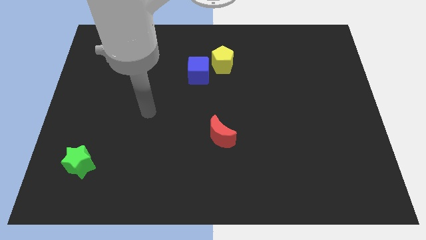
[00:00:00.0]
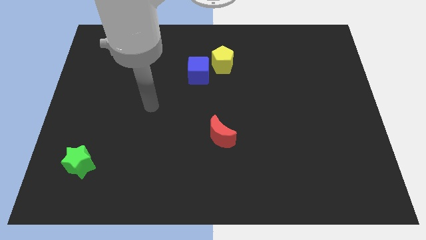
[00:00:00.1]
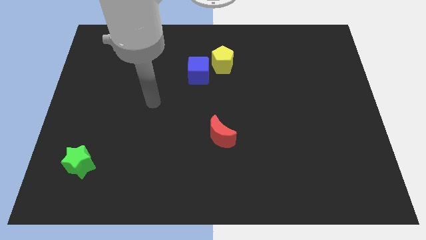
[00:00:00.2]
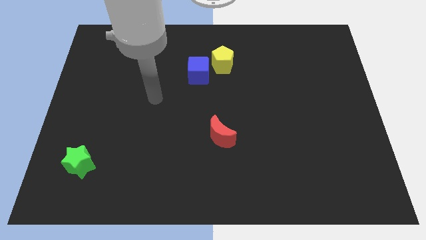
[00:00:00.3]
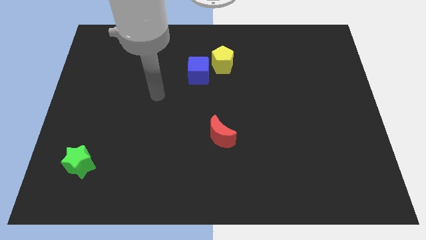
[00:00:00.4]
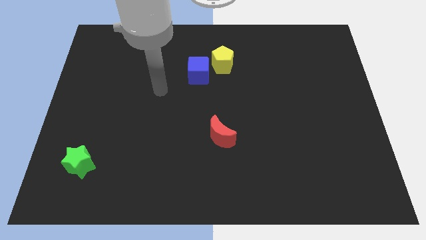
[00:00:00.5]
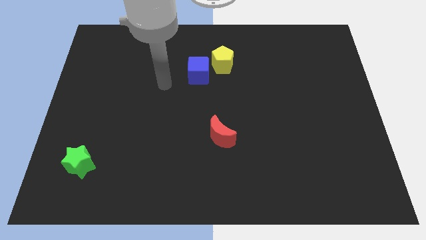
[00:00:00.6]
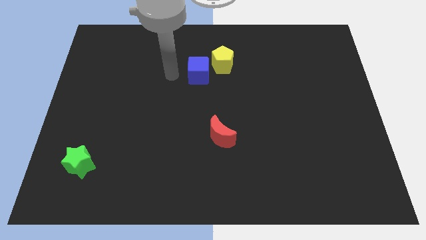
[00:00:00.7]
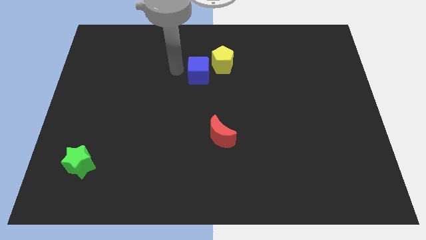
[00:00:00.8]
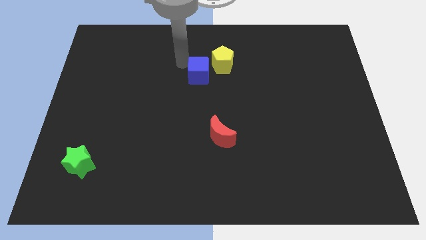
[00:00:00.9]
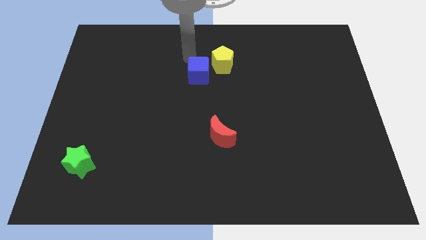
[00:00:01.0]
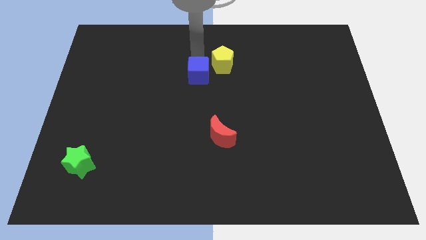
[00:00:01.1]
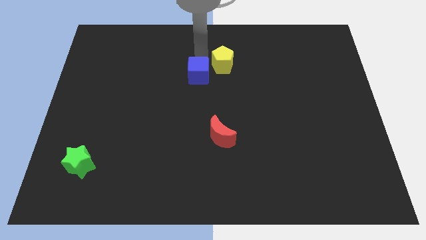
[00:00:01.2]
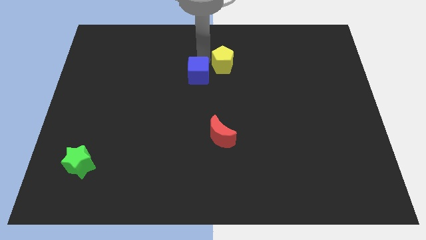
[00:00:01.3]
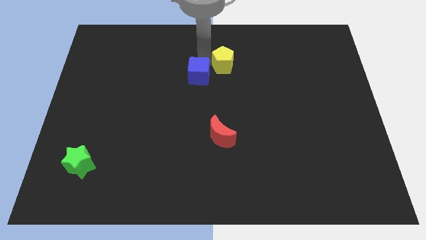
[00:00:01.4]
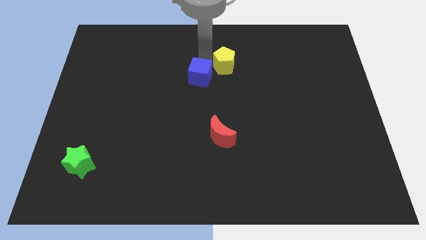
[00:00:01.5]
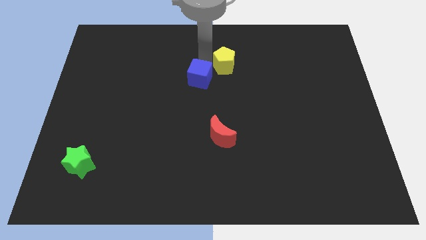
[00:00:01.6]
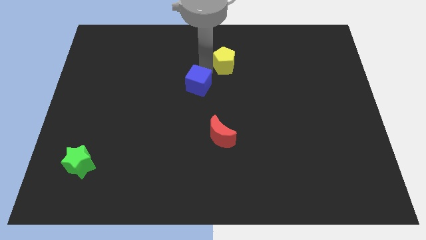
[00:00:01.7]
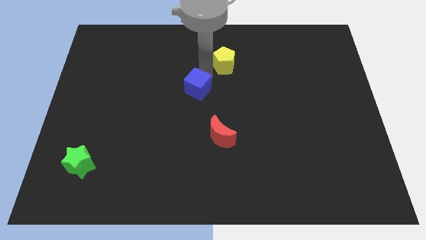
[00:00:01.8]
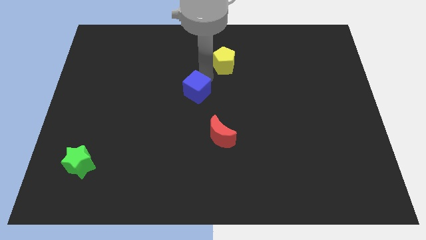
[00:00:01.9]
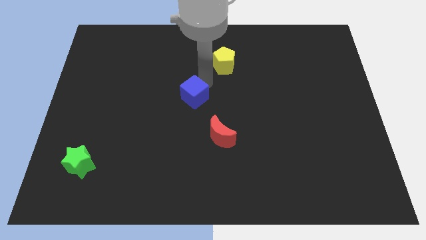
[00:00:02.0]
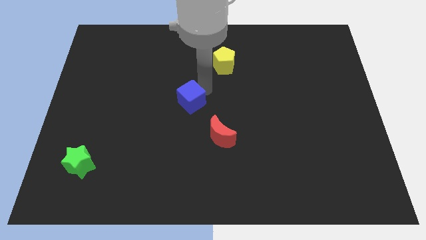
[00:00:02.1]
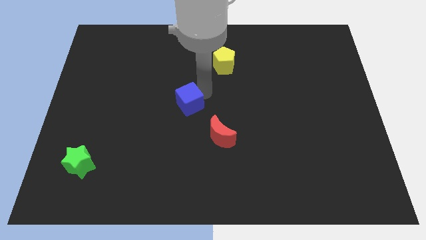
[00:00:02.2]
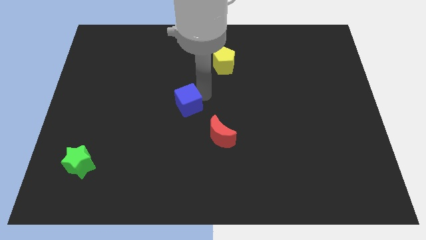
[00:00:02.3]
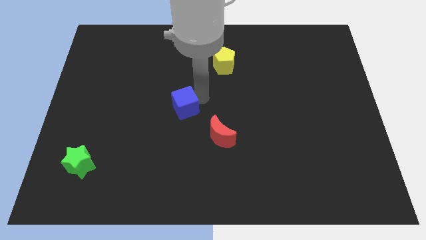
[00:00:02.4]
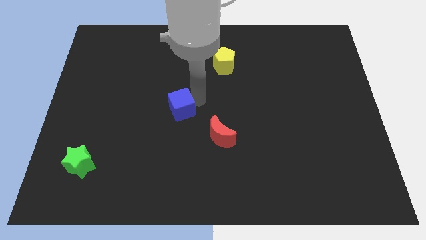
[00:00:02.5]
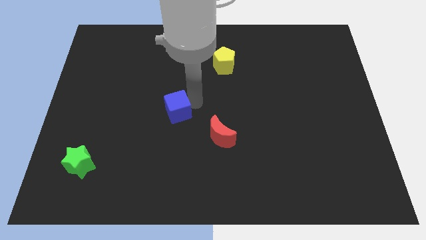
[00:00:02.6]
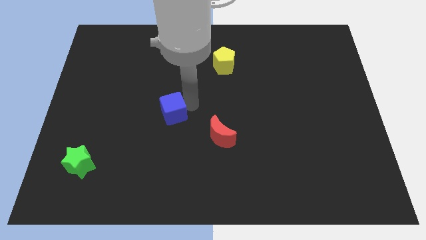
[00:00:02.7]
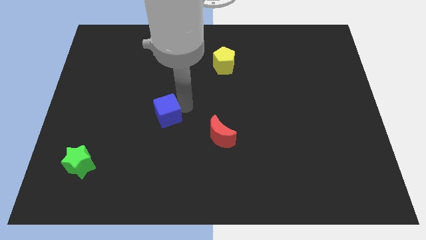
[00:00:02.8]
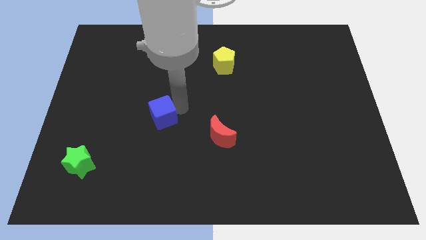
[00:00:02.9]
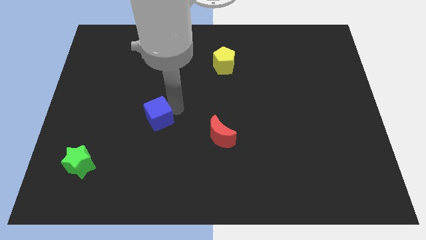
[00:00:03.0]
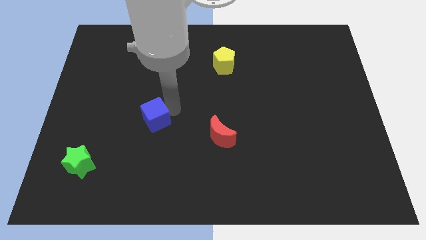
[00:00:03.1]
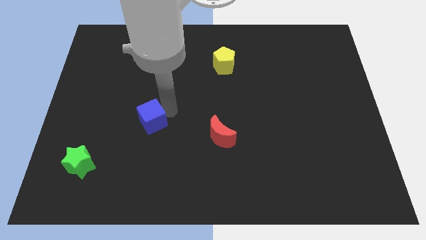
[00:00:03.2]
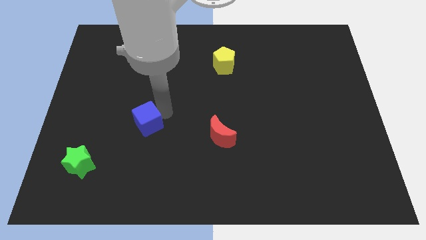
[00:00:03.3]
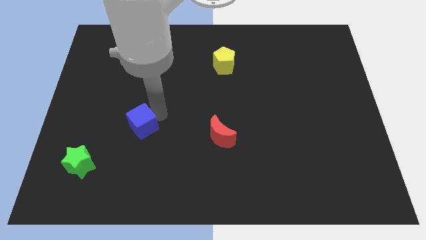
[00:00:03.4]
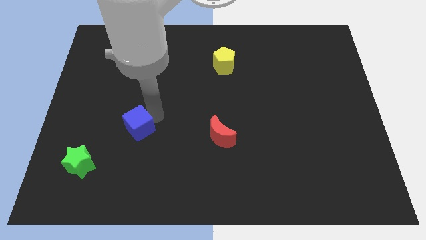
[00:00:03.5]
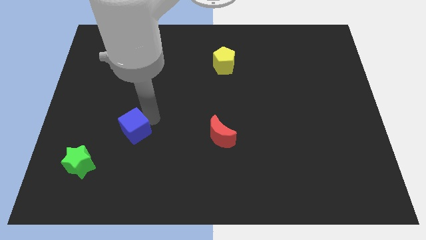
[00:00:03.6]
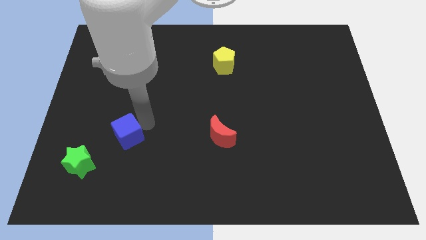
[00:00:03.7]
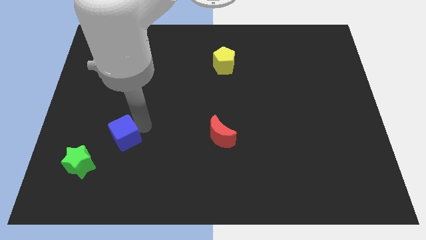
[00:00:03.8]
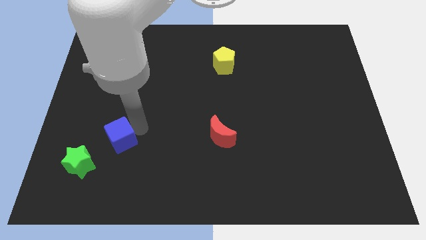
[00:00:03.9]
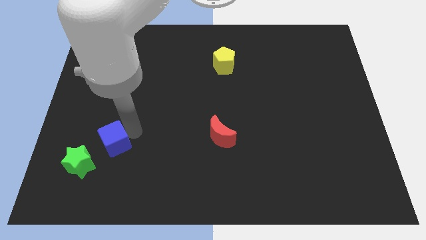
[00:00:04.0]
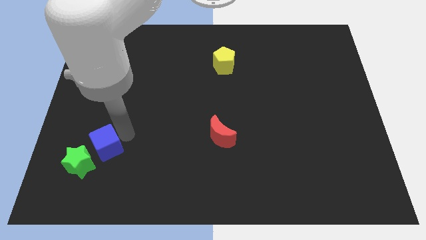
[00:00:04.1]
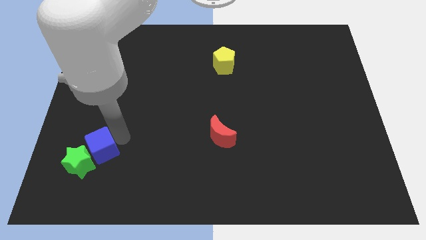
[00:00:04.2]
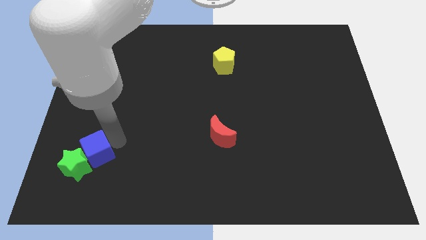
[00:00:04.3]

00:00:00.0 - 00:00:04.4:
slide the blue block next to the green block

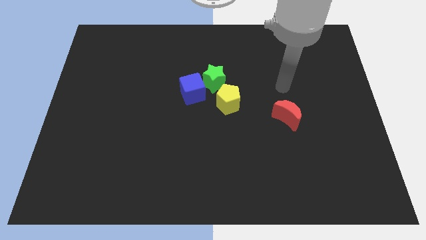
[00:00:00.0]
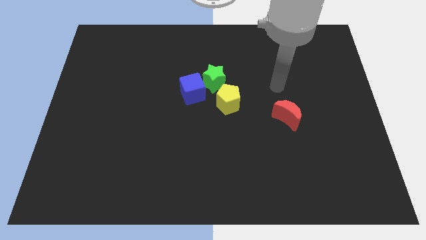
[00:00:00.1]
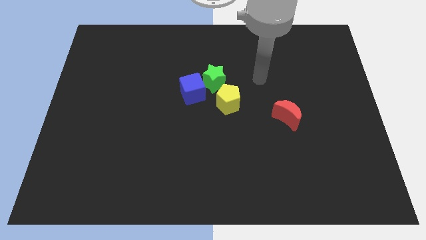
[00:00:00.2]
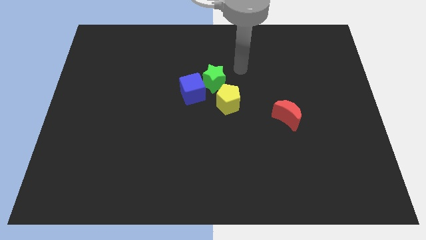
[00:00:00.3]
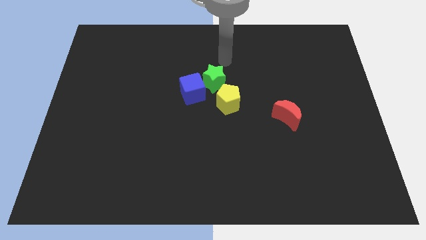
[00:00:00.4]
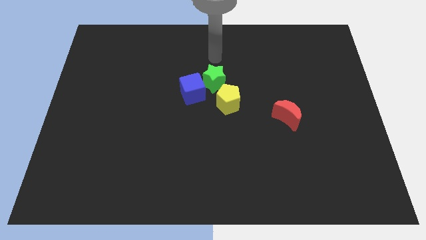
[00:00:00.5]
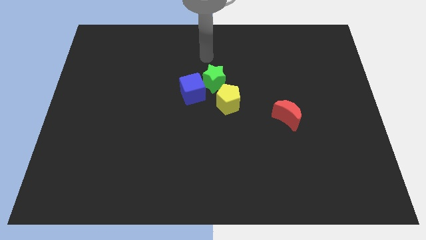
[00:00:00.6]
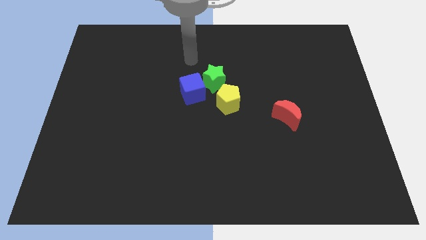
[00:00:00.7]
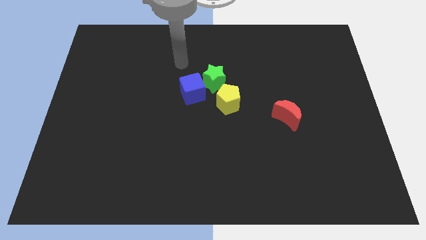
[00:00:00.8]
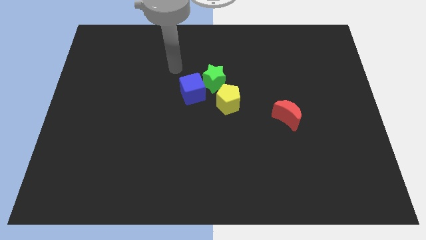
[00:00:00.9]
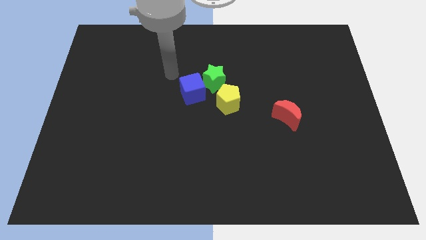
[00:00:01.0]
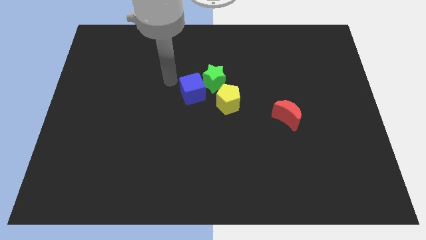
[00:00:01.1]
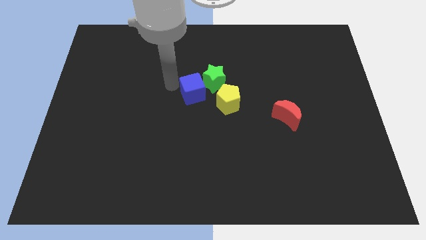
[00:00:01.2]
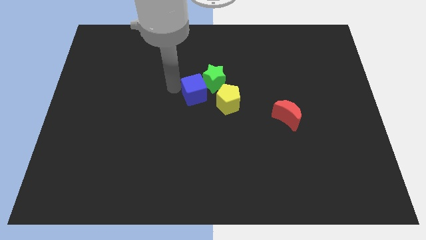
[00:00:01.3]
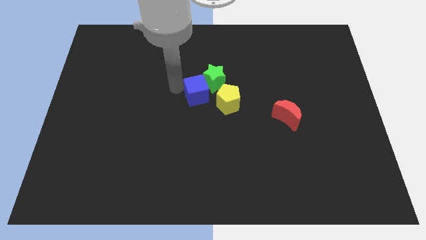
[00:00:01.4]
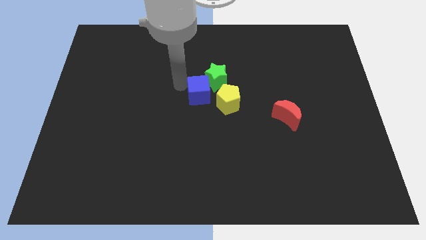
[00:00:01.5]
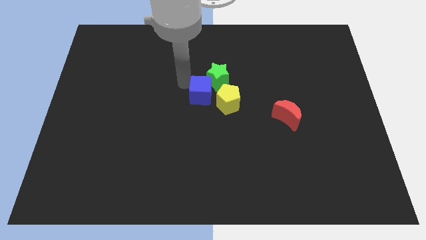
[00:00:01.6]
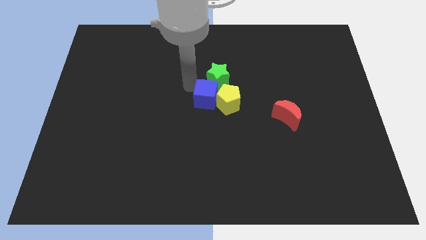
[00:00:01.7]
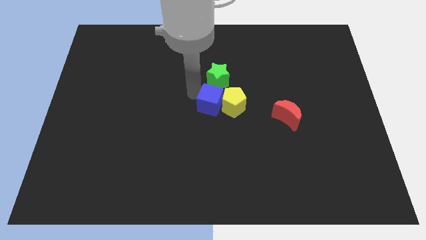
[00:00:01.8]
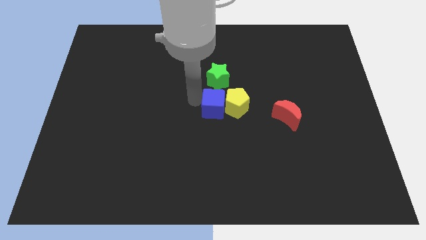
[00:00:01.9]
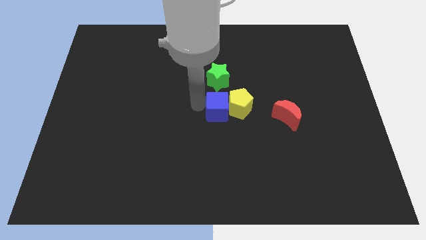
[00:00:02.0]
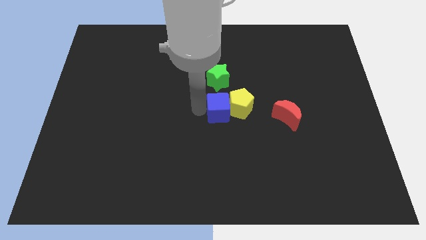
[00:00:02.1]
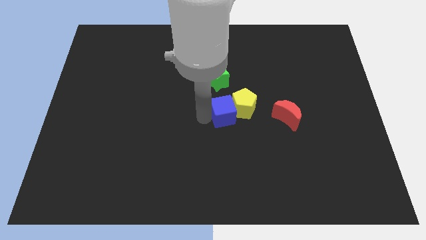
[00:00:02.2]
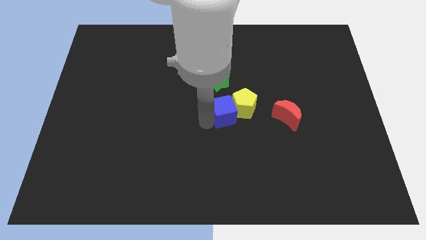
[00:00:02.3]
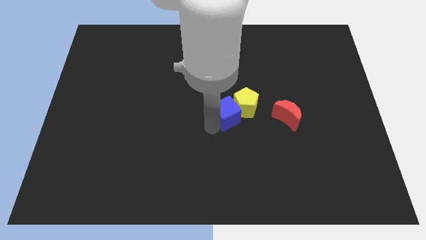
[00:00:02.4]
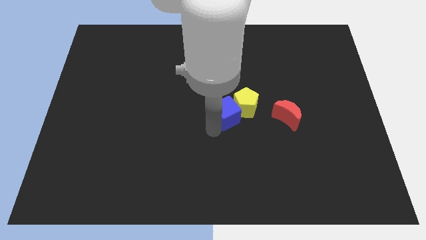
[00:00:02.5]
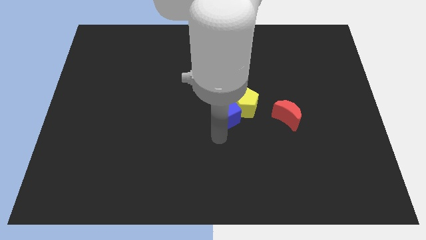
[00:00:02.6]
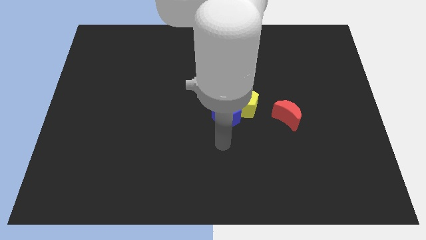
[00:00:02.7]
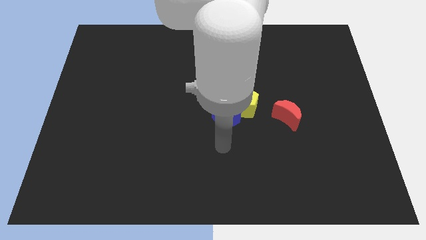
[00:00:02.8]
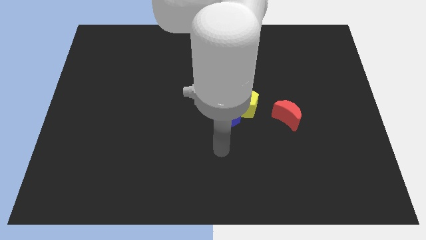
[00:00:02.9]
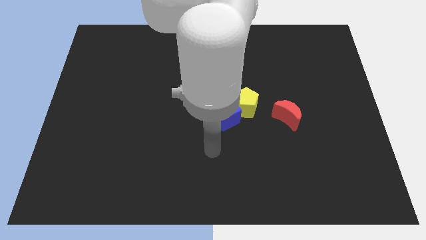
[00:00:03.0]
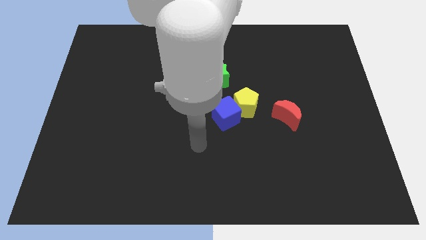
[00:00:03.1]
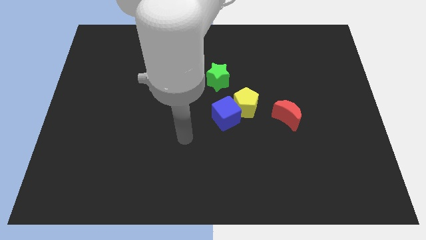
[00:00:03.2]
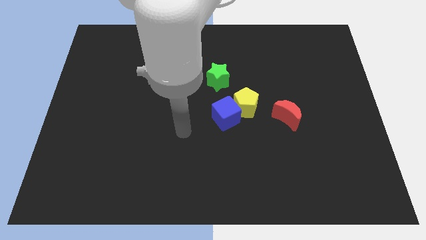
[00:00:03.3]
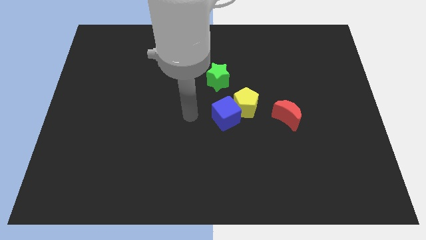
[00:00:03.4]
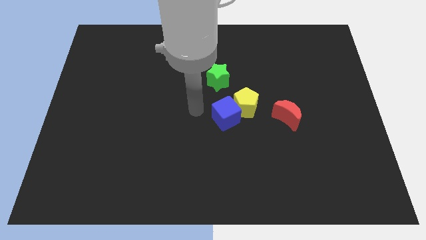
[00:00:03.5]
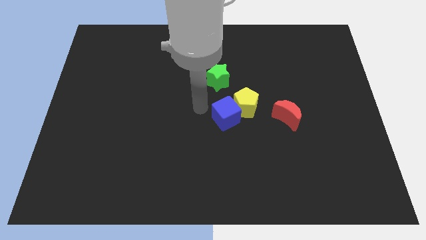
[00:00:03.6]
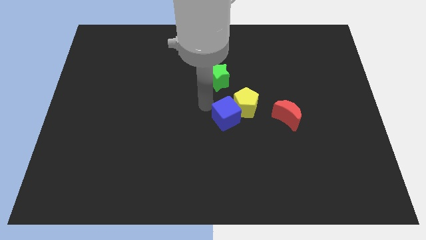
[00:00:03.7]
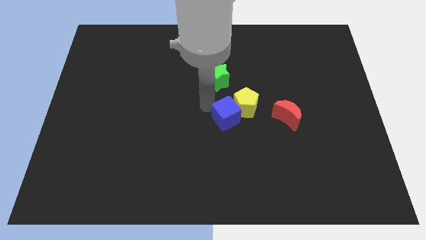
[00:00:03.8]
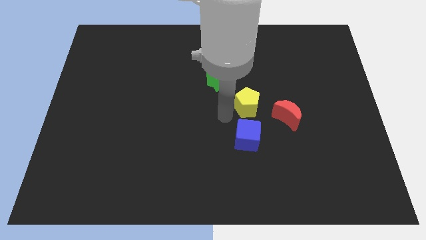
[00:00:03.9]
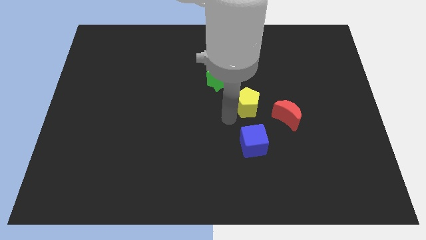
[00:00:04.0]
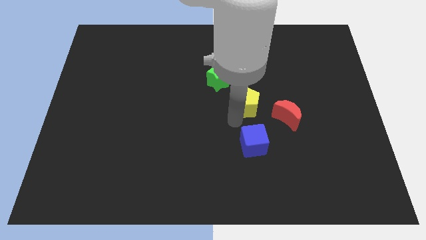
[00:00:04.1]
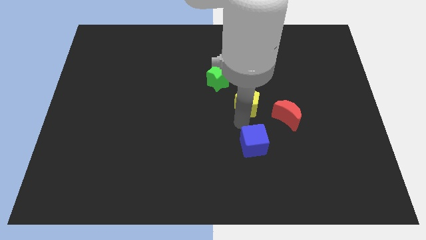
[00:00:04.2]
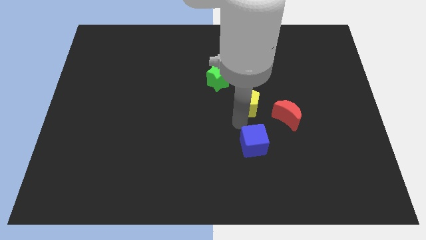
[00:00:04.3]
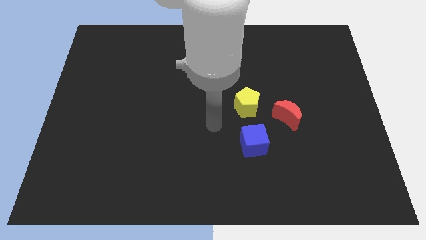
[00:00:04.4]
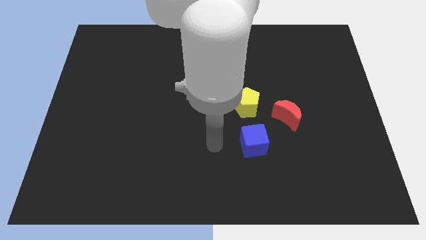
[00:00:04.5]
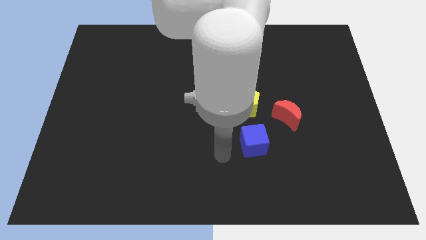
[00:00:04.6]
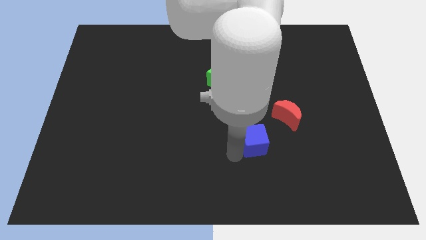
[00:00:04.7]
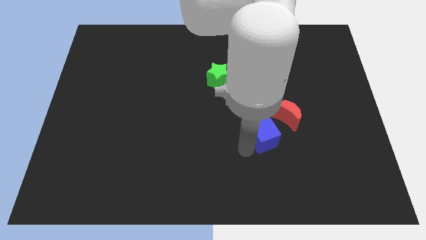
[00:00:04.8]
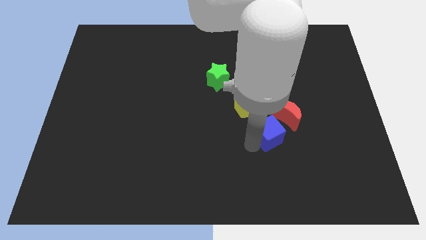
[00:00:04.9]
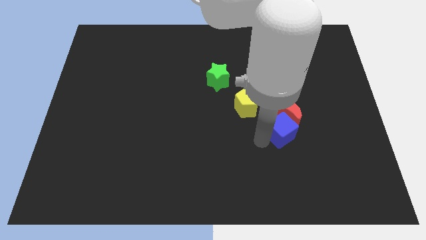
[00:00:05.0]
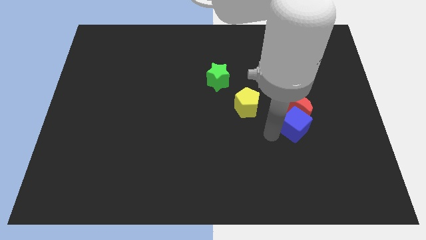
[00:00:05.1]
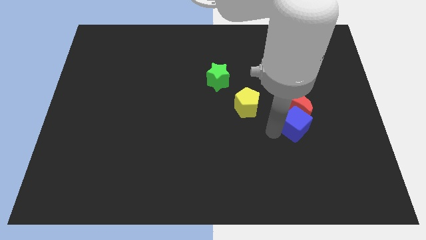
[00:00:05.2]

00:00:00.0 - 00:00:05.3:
push the blue block next to the red moon
